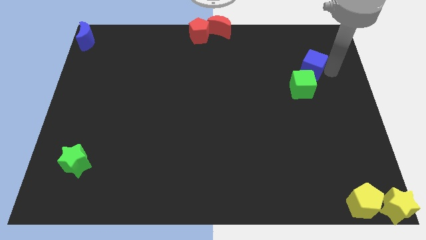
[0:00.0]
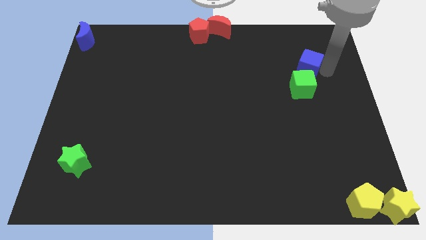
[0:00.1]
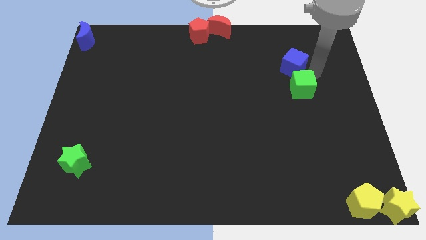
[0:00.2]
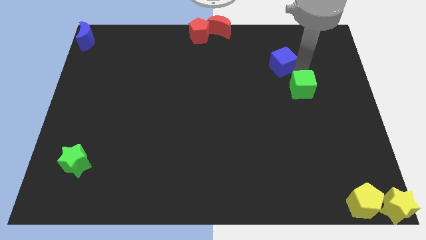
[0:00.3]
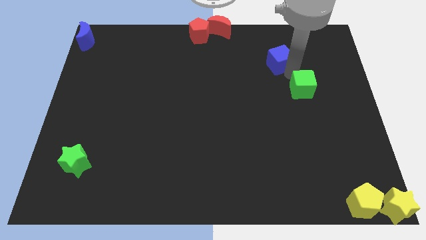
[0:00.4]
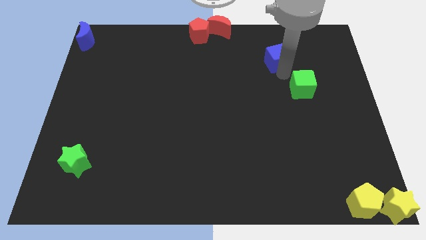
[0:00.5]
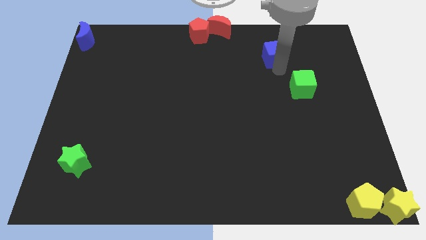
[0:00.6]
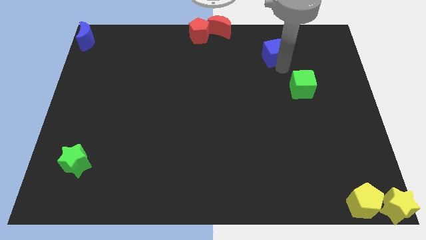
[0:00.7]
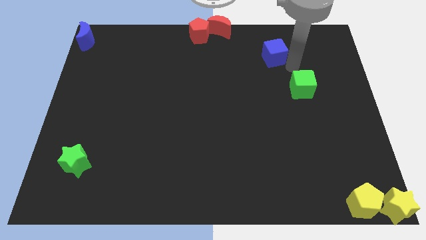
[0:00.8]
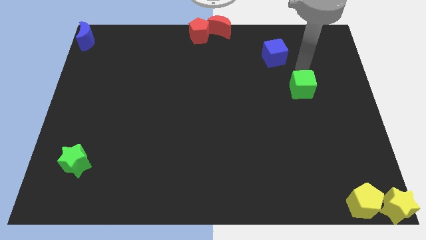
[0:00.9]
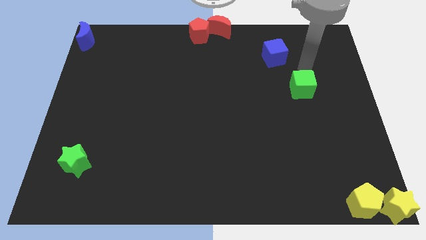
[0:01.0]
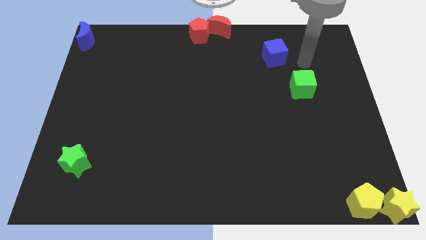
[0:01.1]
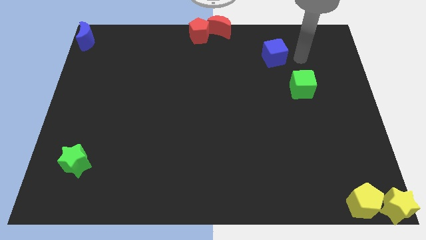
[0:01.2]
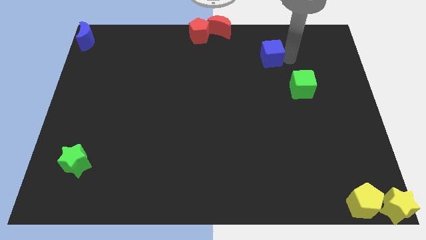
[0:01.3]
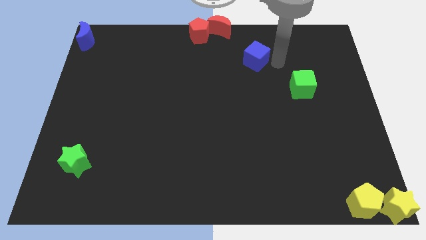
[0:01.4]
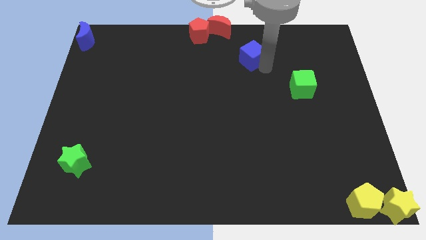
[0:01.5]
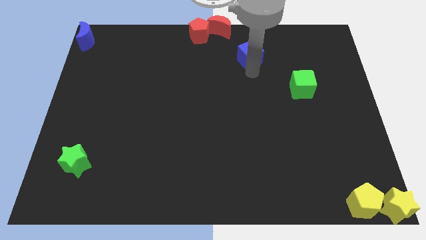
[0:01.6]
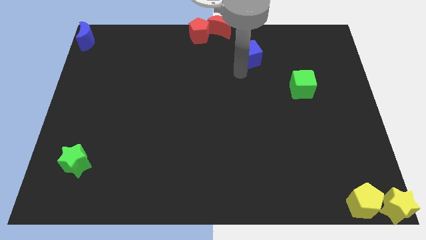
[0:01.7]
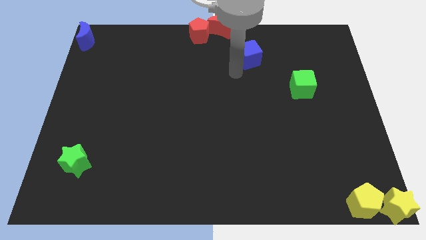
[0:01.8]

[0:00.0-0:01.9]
push the blue cube diagonally to the right of red moon

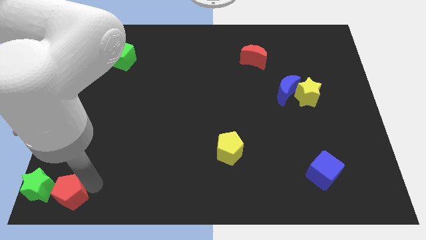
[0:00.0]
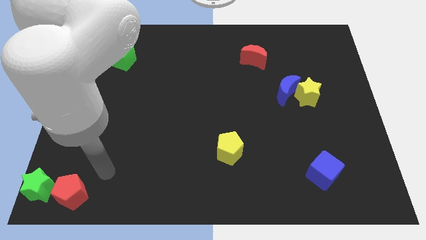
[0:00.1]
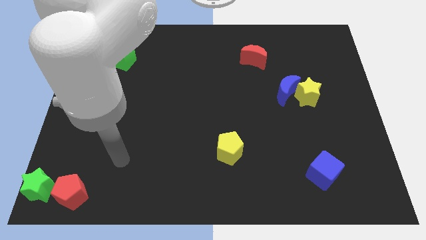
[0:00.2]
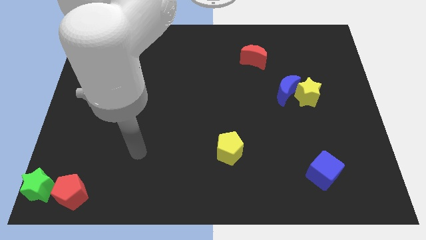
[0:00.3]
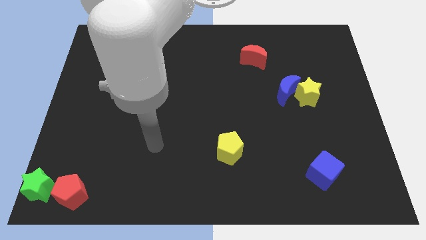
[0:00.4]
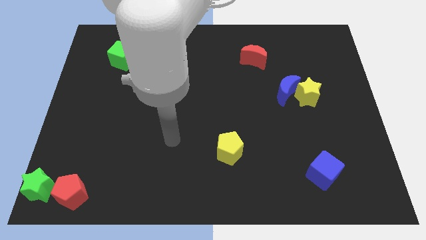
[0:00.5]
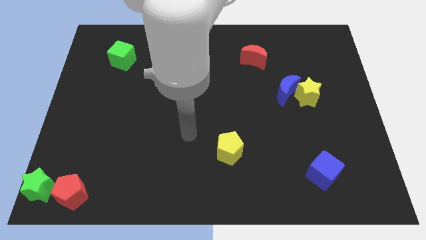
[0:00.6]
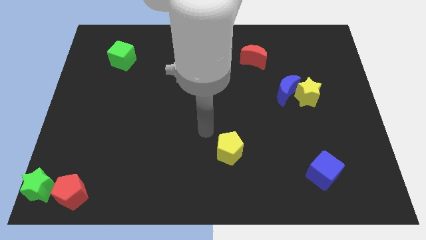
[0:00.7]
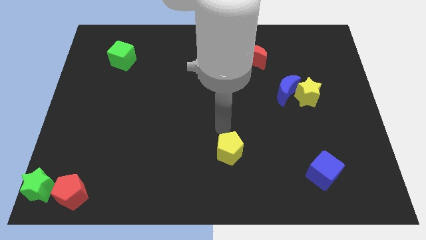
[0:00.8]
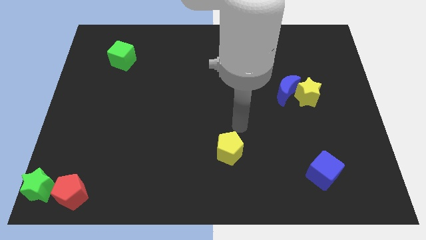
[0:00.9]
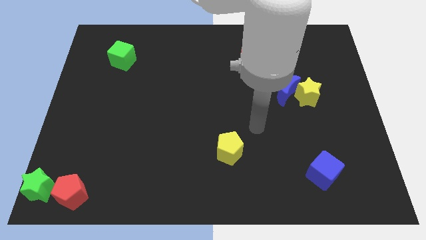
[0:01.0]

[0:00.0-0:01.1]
place the red pentagon close to the green star

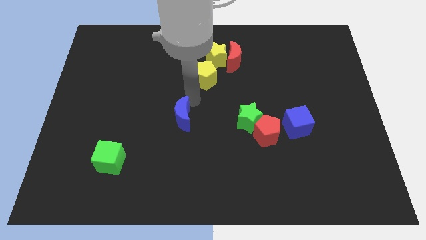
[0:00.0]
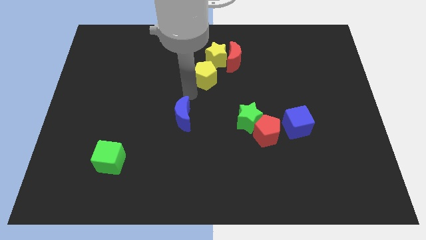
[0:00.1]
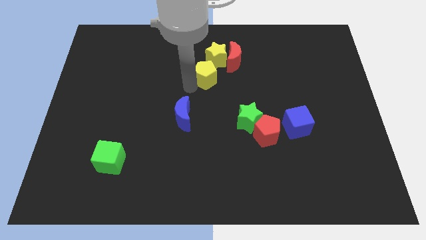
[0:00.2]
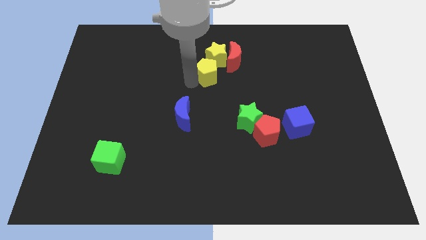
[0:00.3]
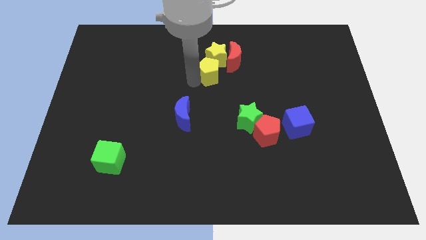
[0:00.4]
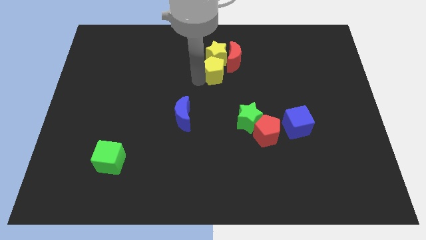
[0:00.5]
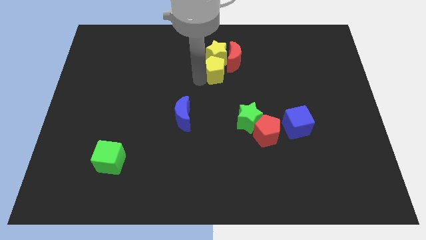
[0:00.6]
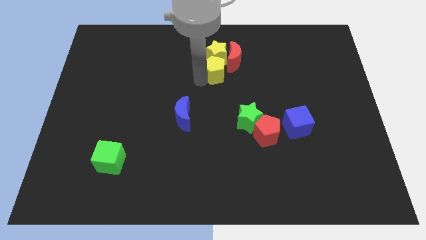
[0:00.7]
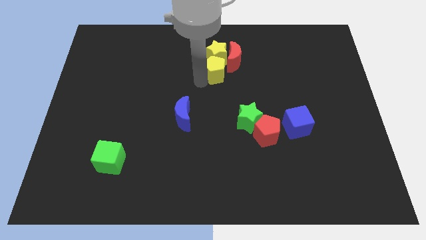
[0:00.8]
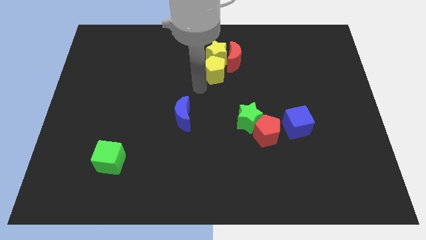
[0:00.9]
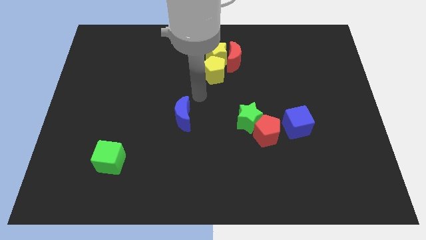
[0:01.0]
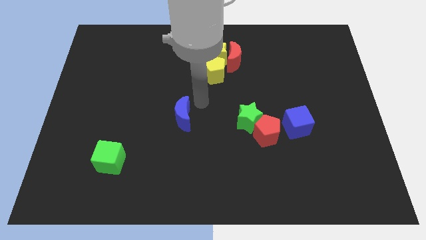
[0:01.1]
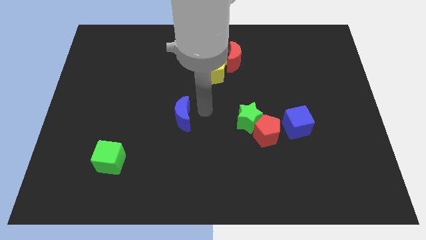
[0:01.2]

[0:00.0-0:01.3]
push yellow blocks in a vertical line

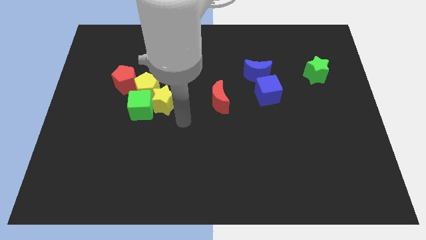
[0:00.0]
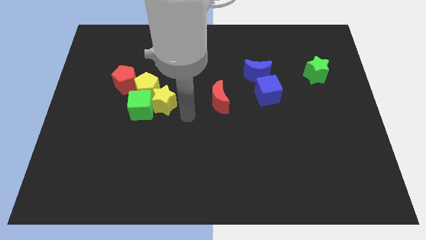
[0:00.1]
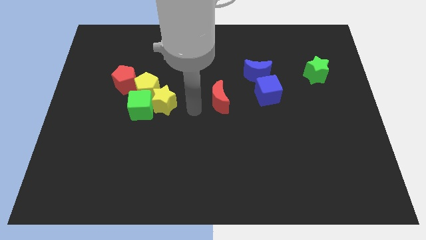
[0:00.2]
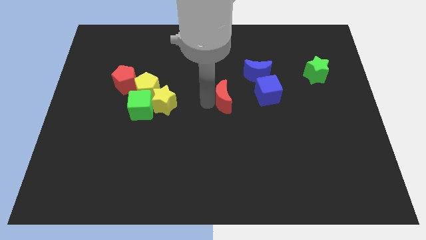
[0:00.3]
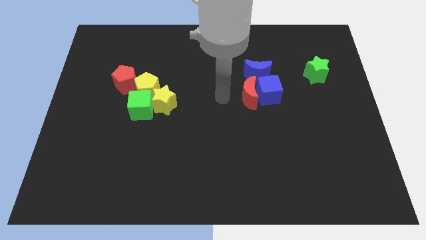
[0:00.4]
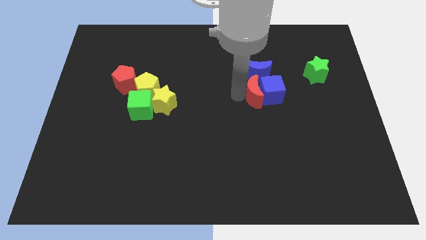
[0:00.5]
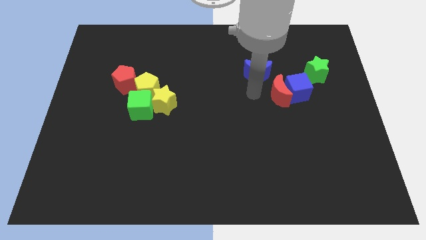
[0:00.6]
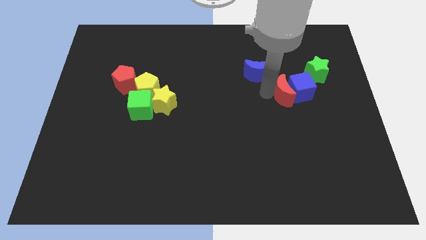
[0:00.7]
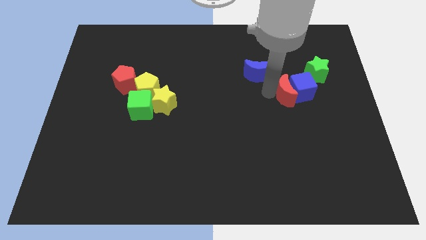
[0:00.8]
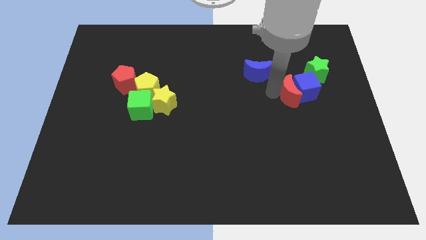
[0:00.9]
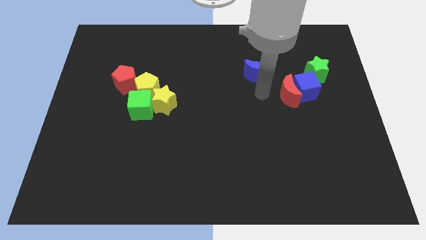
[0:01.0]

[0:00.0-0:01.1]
push the red moon into the blue cube

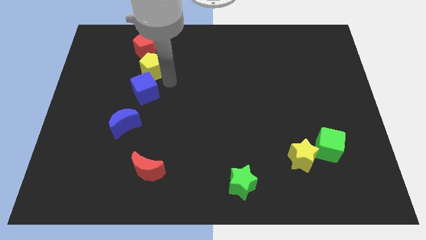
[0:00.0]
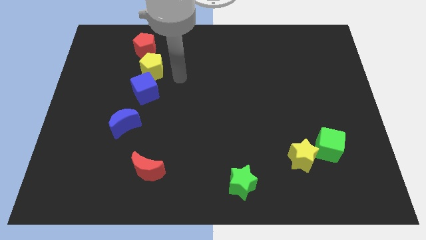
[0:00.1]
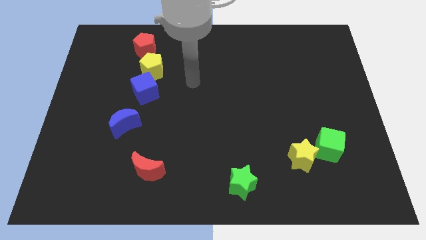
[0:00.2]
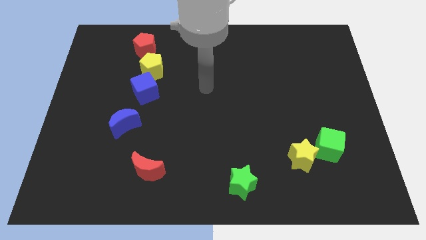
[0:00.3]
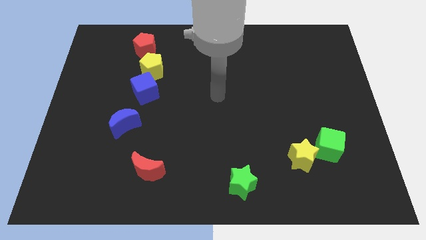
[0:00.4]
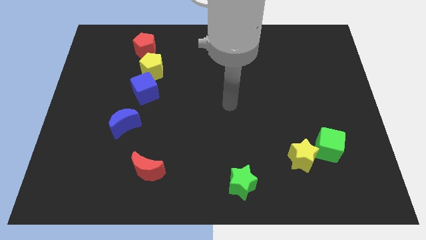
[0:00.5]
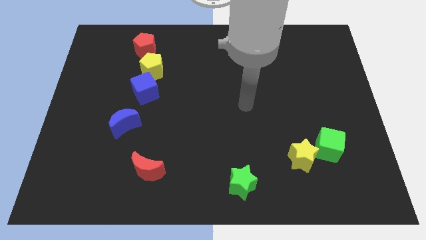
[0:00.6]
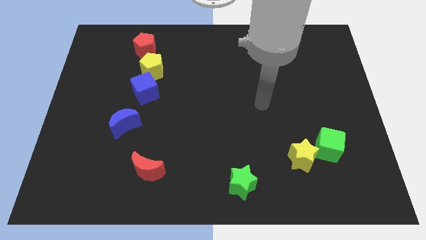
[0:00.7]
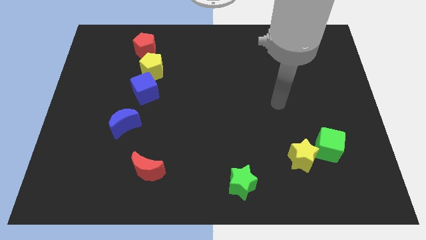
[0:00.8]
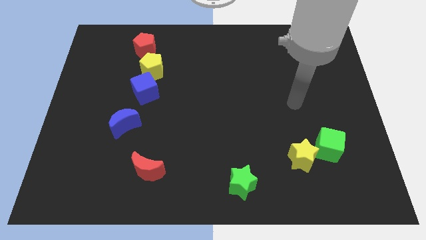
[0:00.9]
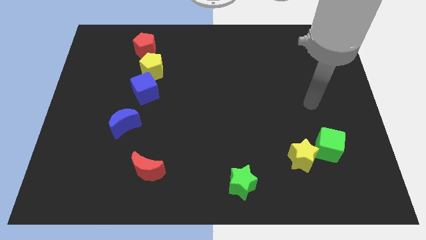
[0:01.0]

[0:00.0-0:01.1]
move your arm away from yellow pentagon

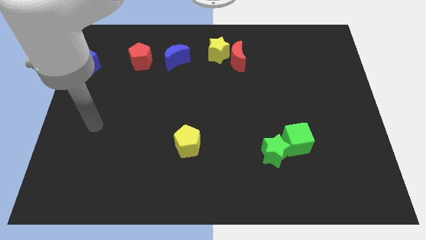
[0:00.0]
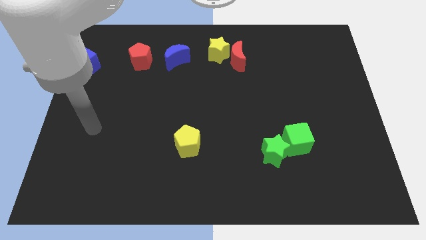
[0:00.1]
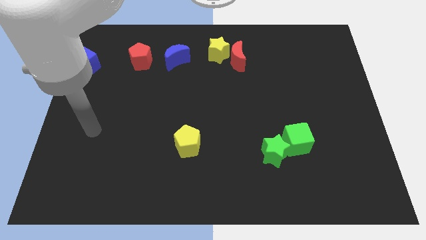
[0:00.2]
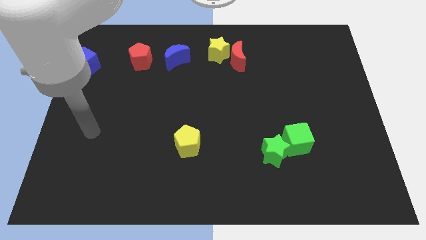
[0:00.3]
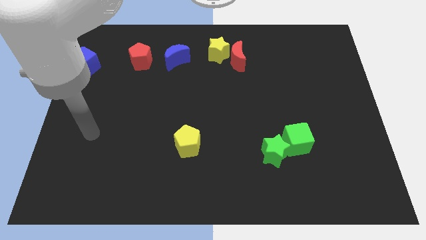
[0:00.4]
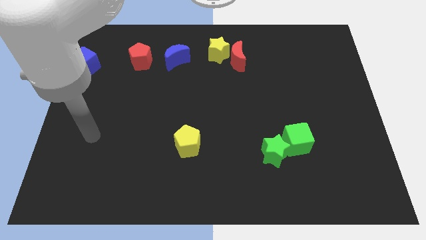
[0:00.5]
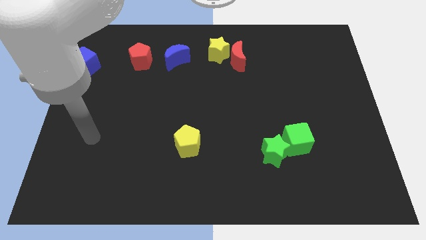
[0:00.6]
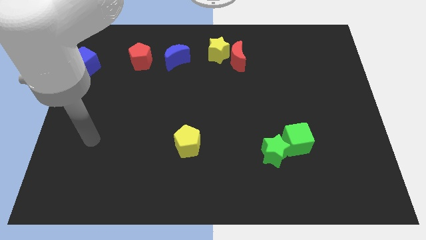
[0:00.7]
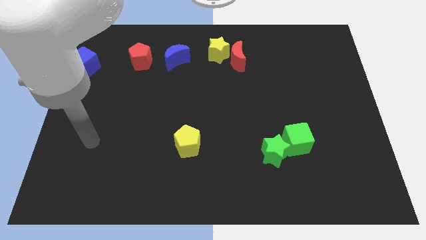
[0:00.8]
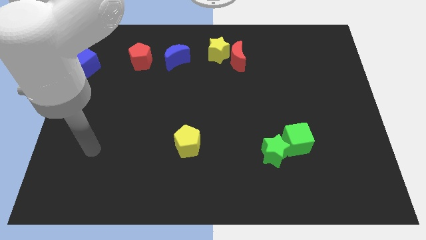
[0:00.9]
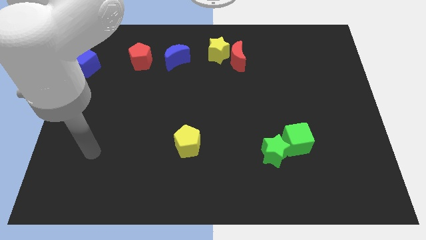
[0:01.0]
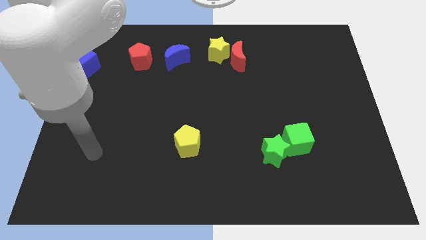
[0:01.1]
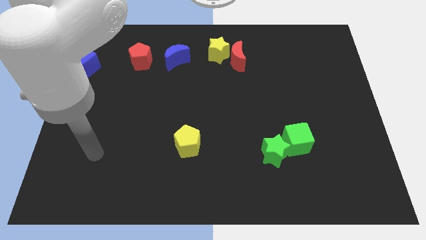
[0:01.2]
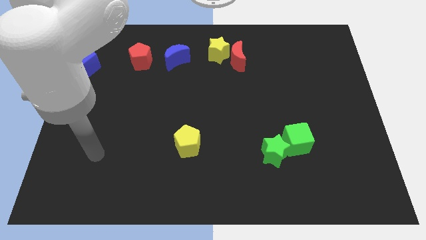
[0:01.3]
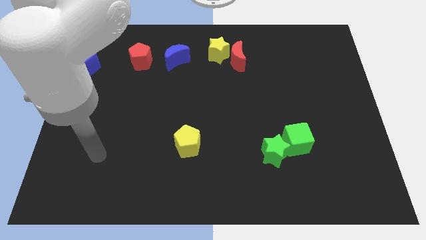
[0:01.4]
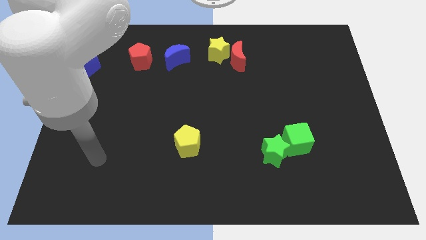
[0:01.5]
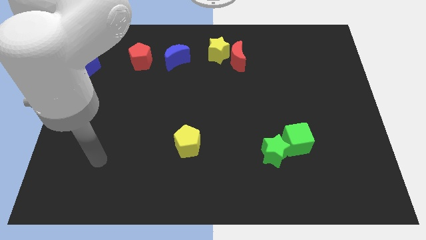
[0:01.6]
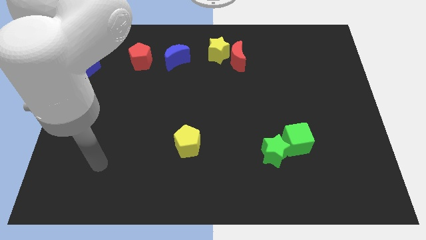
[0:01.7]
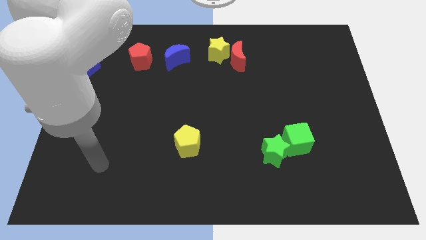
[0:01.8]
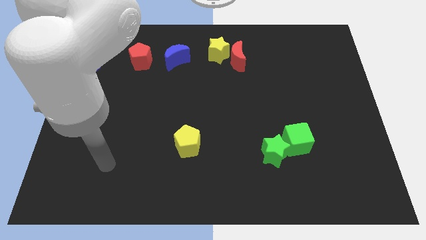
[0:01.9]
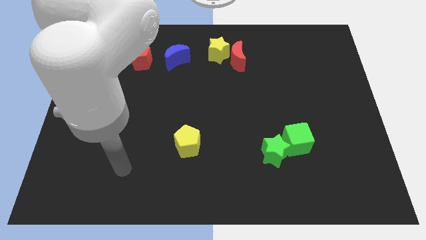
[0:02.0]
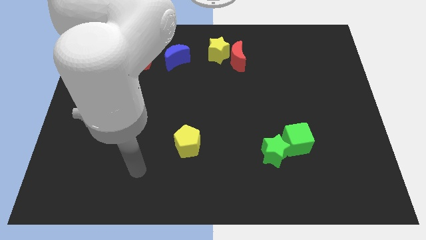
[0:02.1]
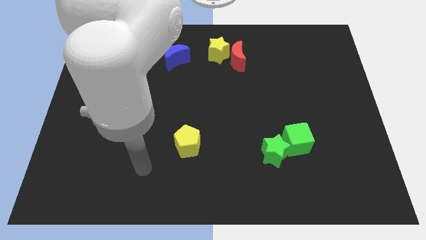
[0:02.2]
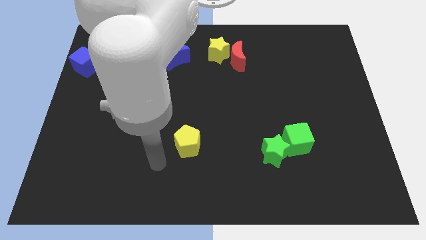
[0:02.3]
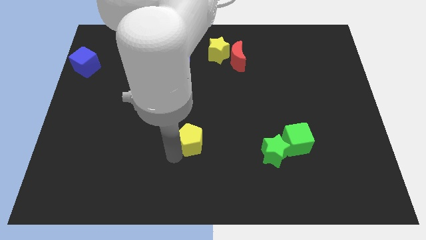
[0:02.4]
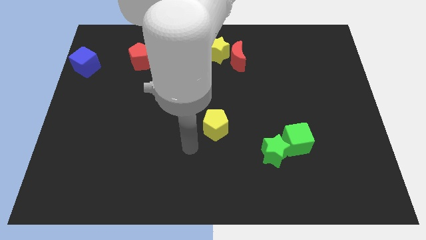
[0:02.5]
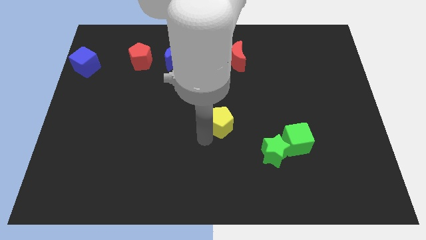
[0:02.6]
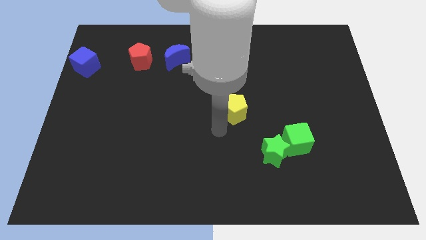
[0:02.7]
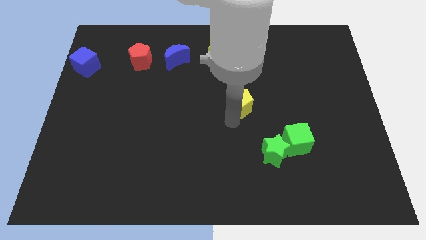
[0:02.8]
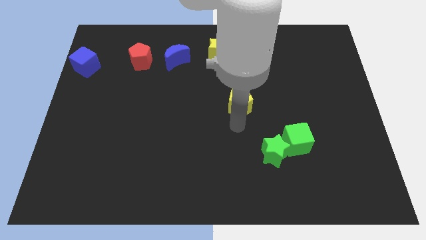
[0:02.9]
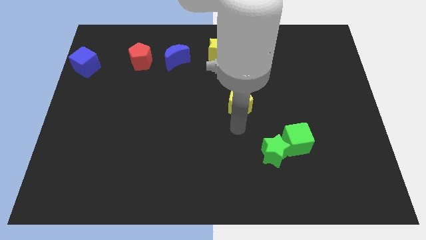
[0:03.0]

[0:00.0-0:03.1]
move the yellow pentagon below the red crescent
